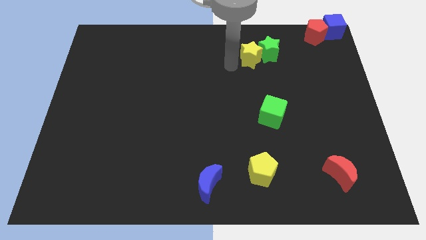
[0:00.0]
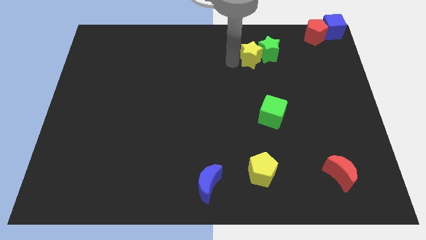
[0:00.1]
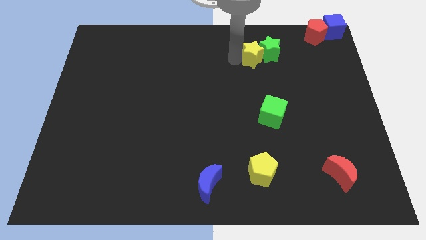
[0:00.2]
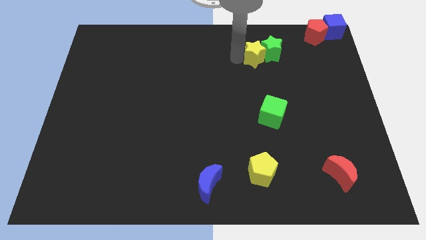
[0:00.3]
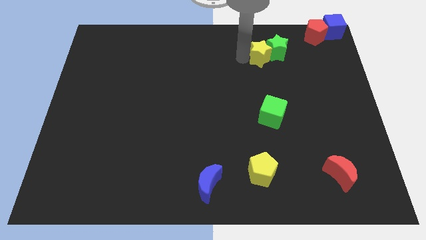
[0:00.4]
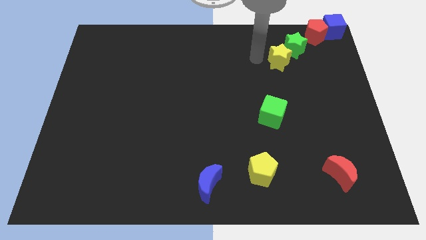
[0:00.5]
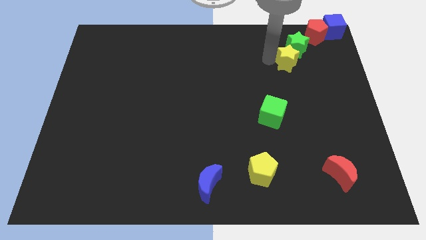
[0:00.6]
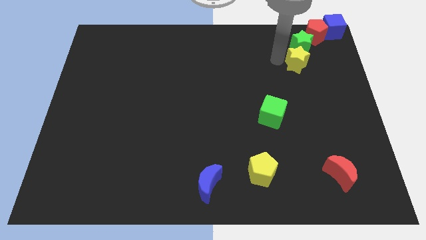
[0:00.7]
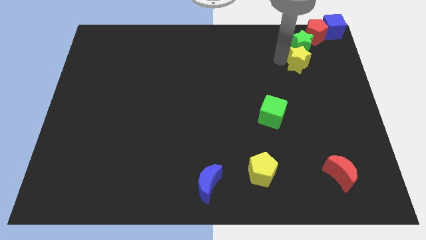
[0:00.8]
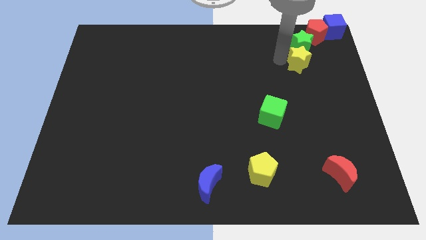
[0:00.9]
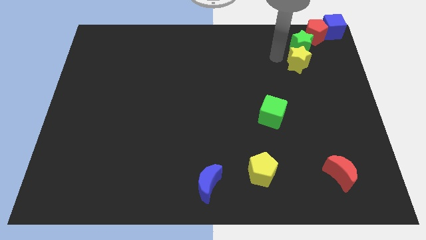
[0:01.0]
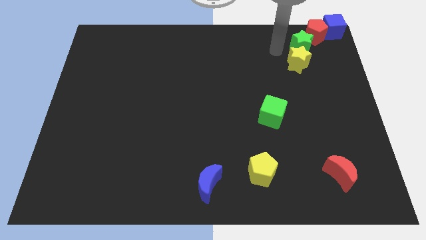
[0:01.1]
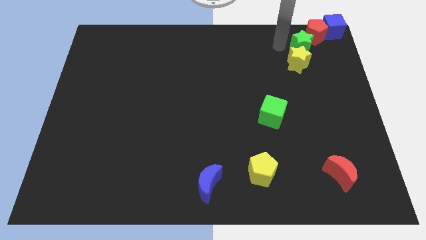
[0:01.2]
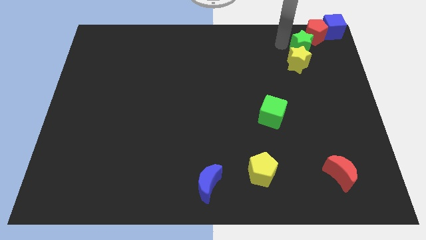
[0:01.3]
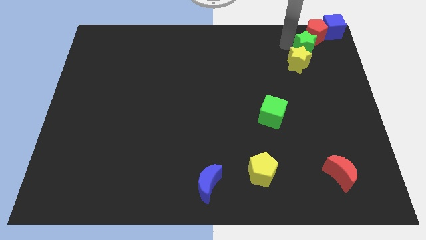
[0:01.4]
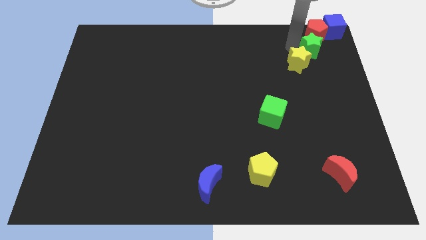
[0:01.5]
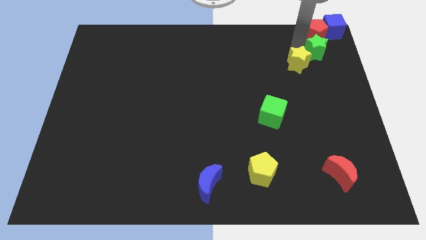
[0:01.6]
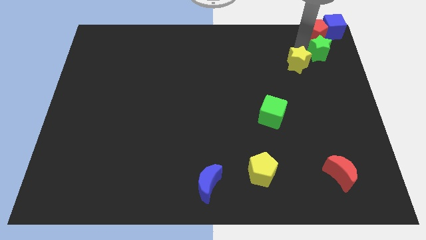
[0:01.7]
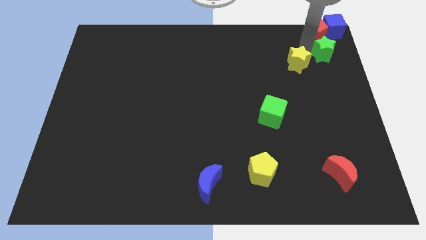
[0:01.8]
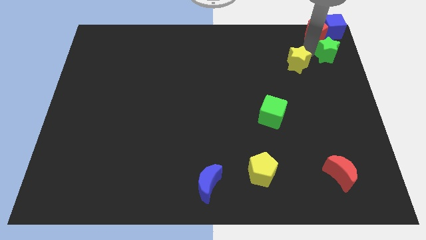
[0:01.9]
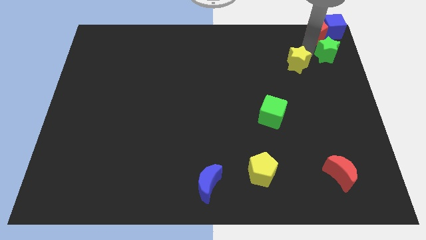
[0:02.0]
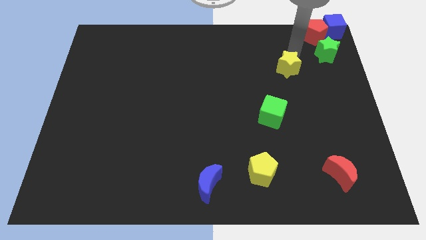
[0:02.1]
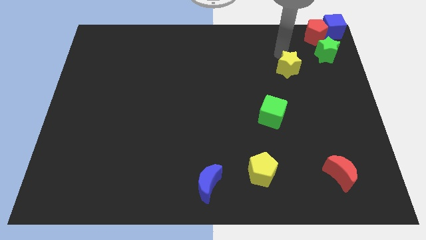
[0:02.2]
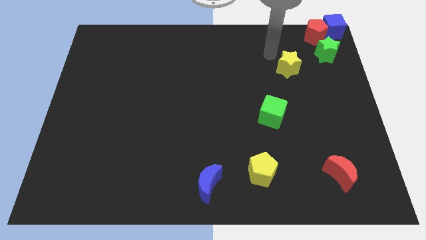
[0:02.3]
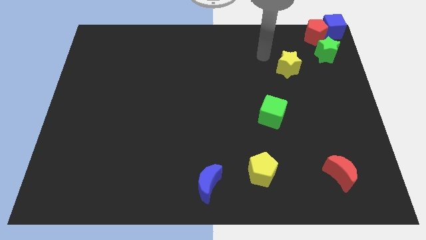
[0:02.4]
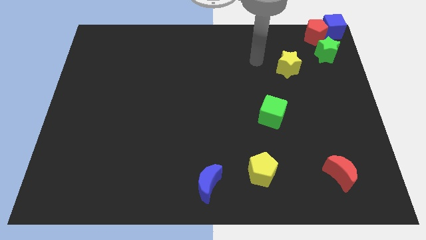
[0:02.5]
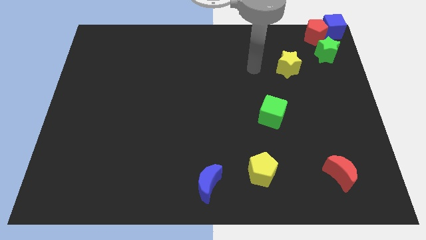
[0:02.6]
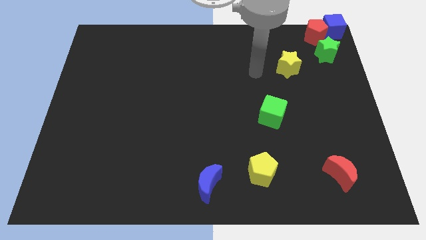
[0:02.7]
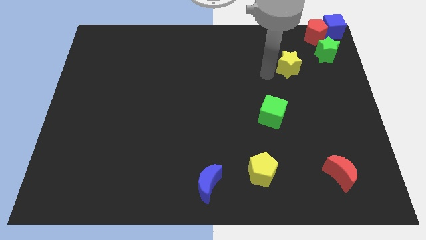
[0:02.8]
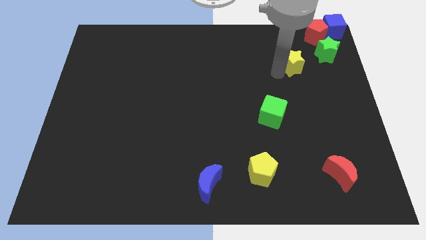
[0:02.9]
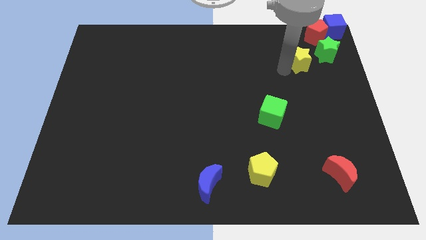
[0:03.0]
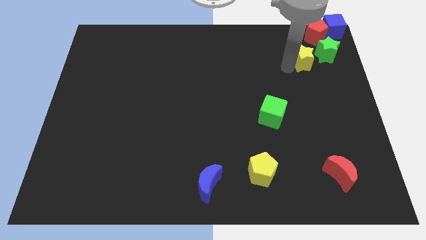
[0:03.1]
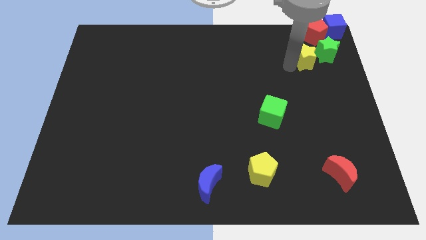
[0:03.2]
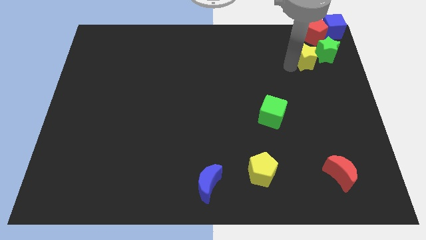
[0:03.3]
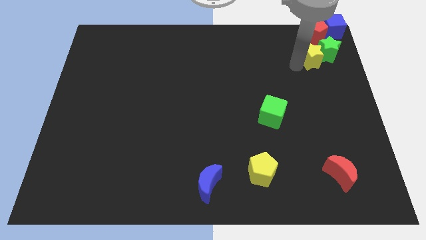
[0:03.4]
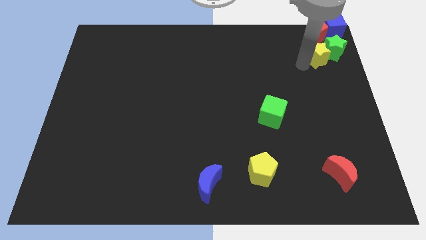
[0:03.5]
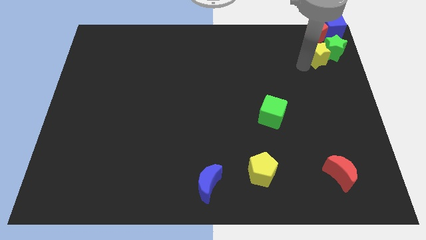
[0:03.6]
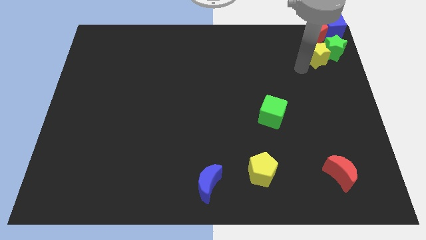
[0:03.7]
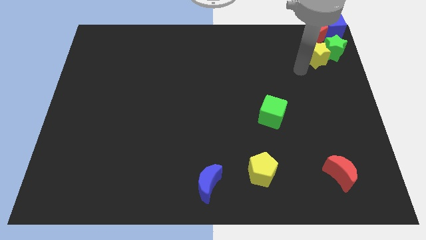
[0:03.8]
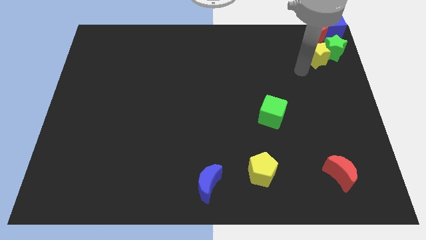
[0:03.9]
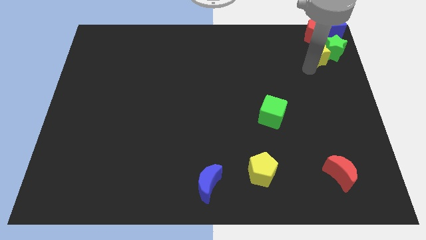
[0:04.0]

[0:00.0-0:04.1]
place the yellow and green stars below the group of blocks

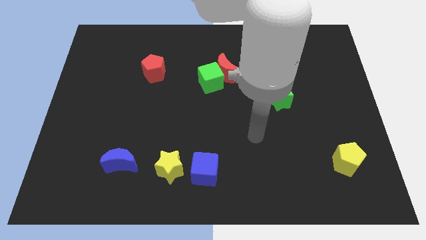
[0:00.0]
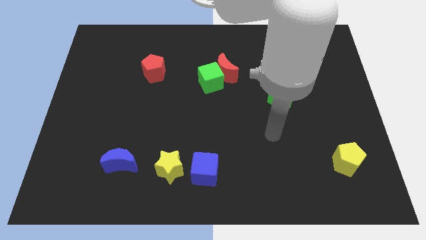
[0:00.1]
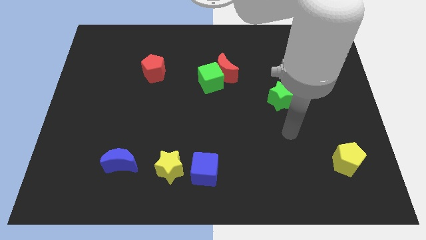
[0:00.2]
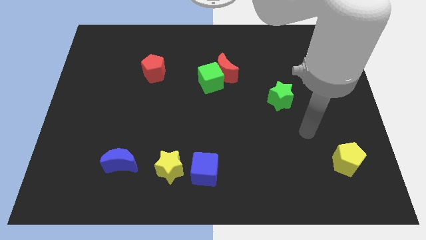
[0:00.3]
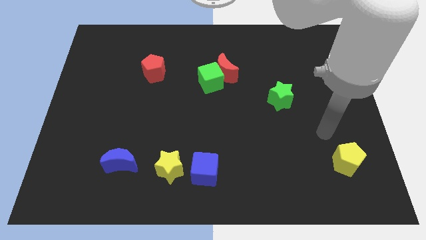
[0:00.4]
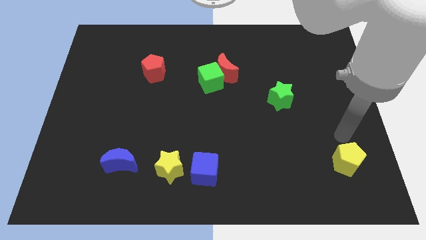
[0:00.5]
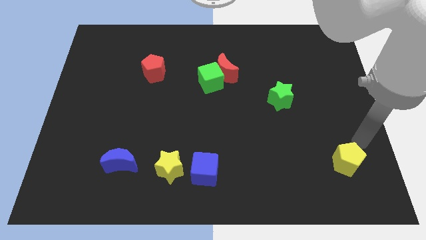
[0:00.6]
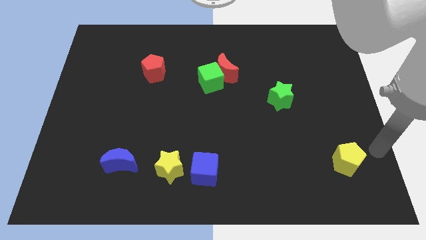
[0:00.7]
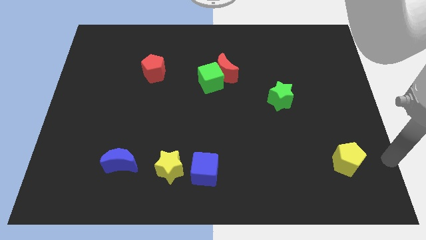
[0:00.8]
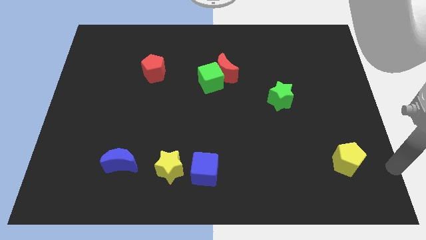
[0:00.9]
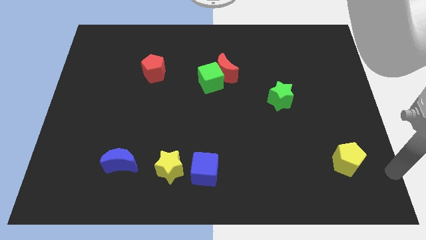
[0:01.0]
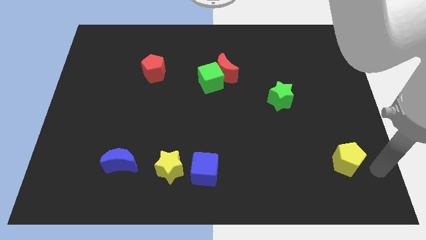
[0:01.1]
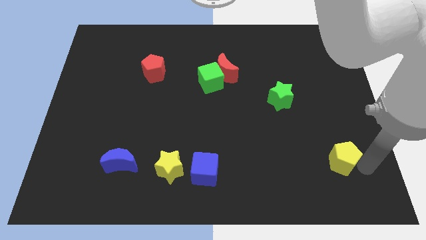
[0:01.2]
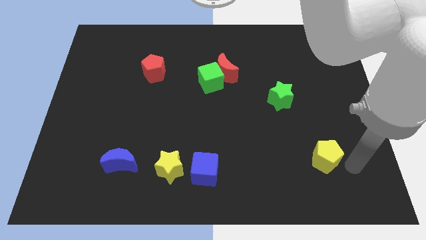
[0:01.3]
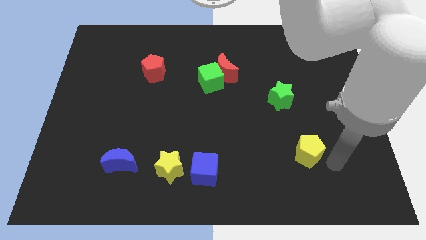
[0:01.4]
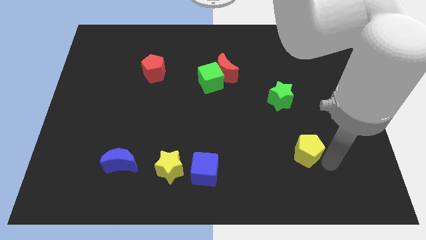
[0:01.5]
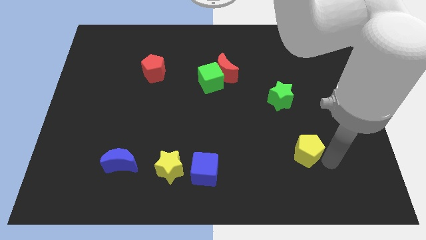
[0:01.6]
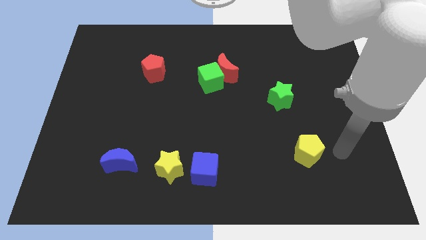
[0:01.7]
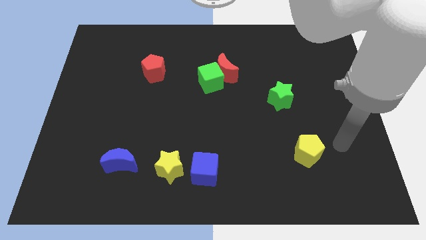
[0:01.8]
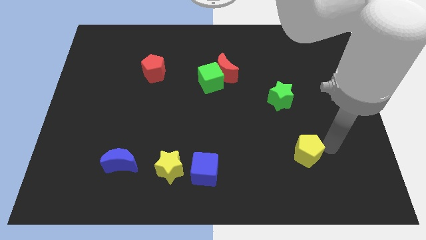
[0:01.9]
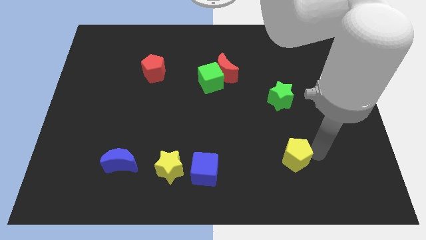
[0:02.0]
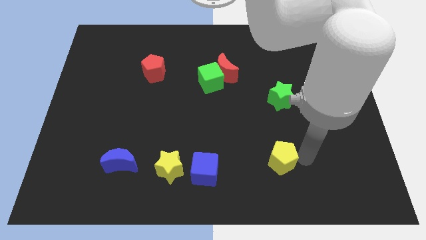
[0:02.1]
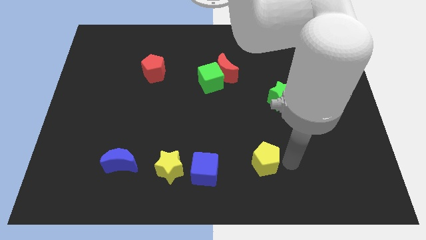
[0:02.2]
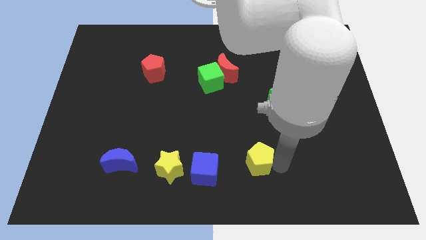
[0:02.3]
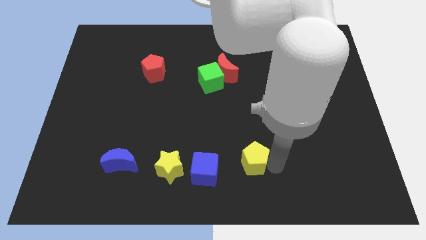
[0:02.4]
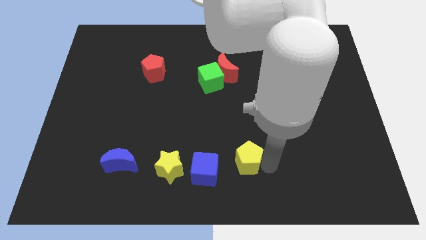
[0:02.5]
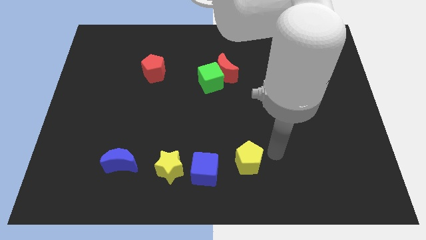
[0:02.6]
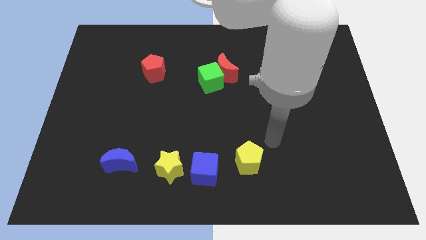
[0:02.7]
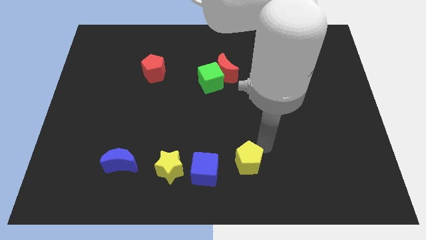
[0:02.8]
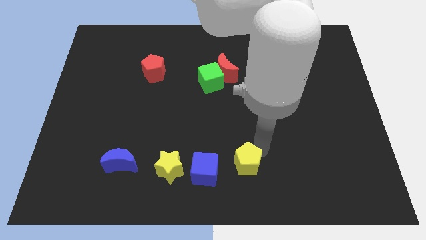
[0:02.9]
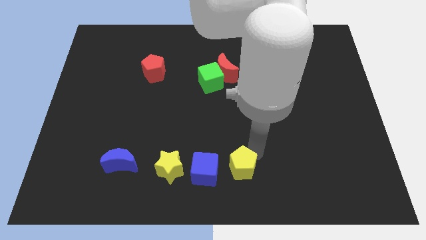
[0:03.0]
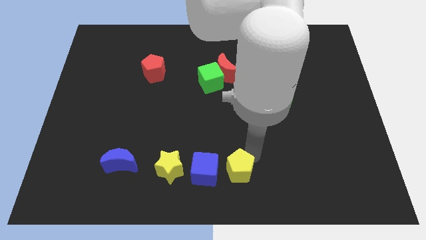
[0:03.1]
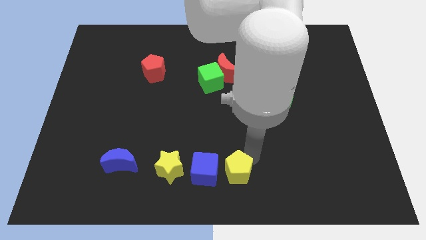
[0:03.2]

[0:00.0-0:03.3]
move yellow pentagon towards blue cube

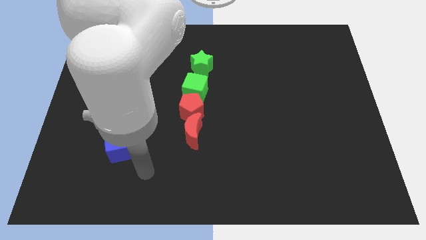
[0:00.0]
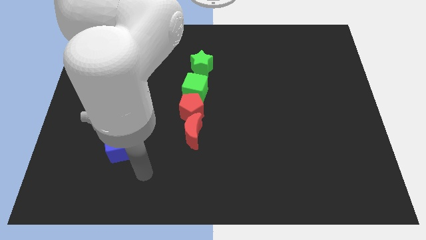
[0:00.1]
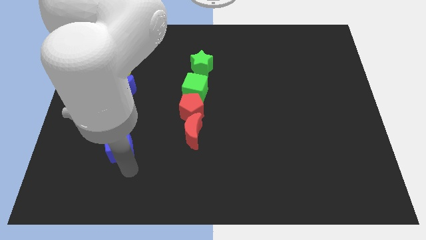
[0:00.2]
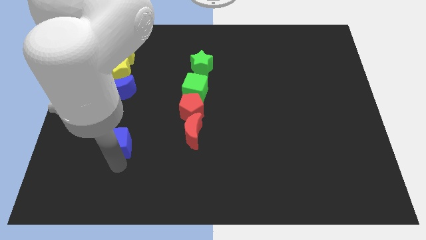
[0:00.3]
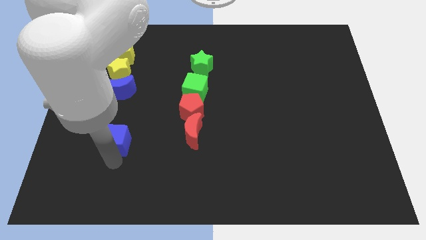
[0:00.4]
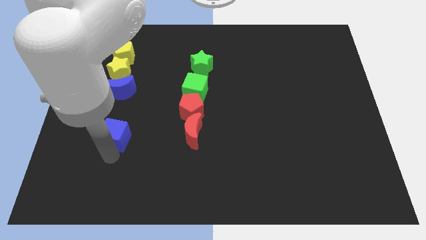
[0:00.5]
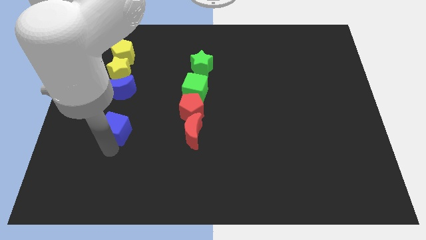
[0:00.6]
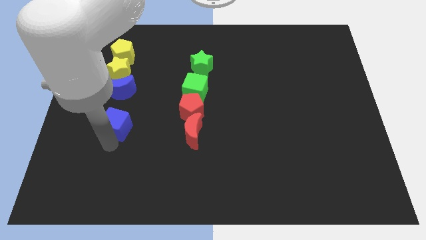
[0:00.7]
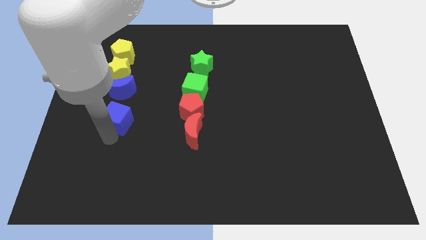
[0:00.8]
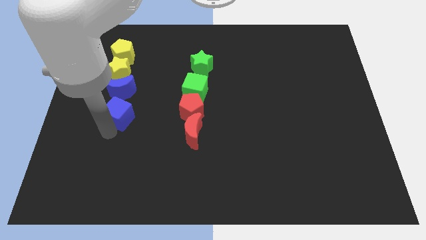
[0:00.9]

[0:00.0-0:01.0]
place blue cube below the blue crescent

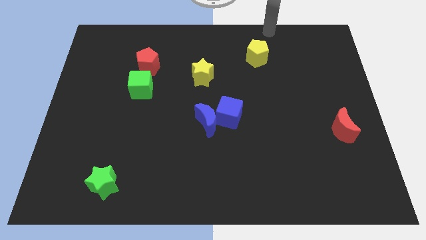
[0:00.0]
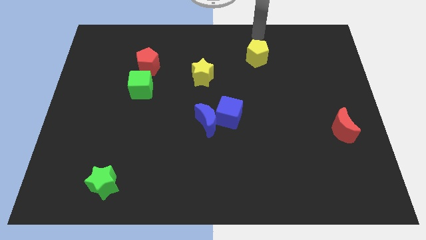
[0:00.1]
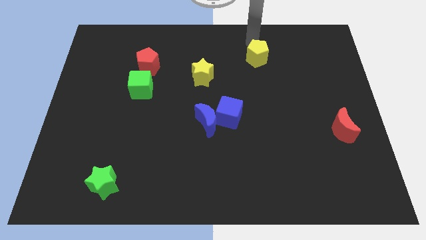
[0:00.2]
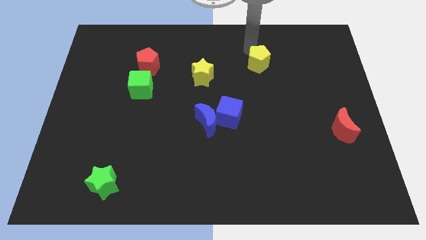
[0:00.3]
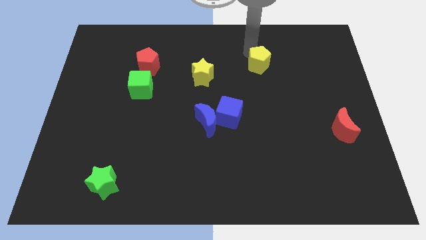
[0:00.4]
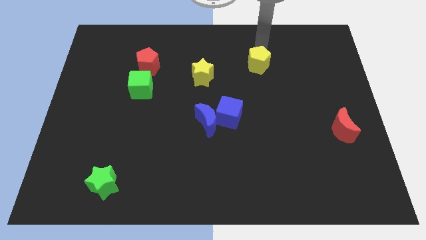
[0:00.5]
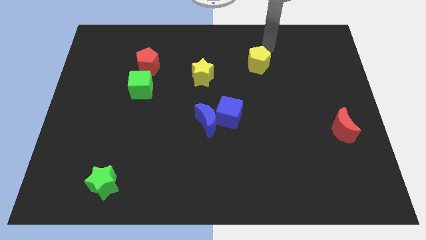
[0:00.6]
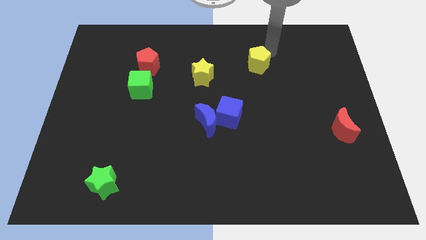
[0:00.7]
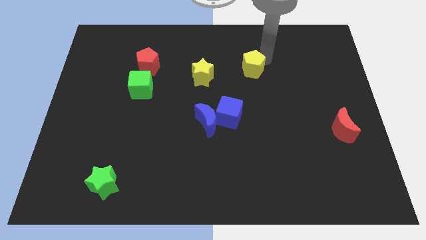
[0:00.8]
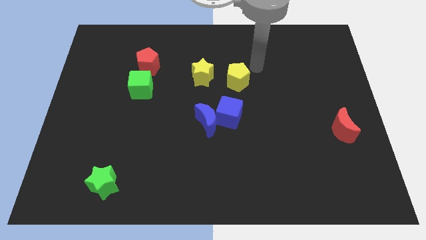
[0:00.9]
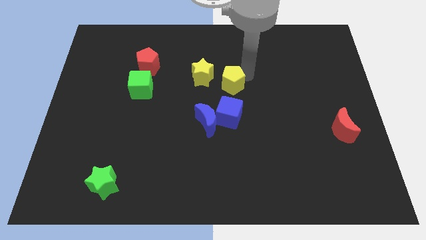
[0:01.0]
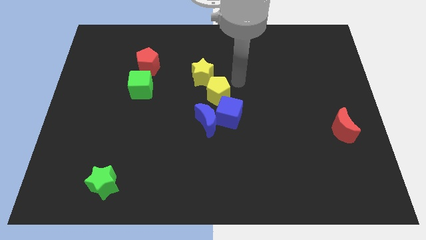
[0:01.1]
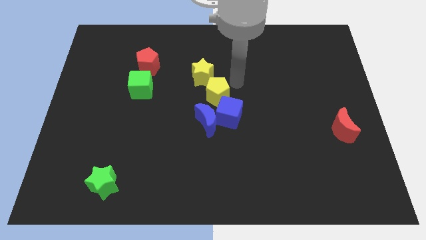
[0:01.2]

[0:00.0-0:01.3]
place the yellow pentagon in between the yellow star and blue cube in diagonally
